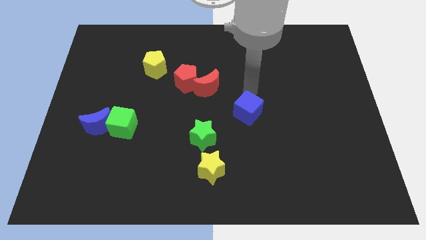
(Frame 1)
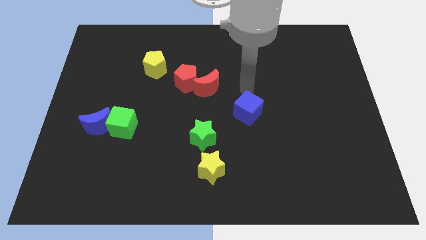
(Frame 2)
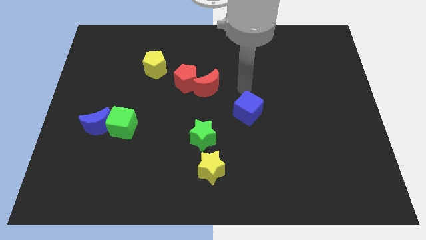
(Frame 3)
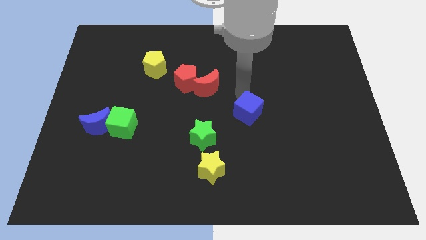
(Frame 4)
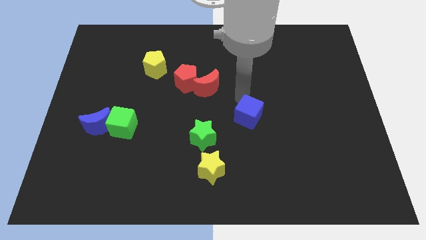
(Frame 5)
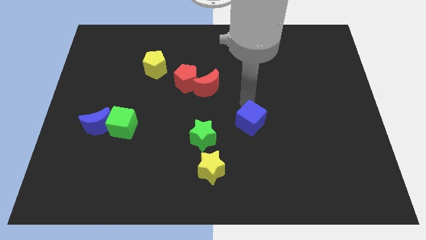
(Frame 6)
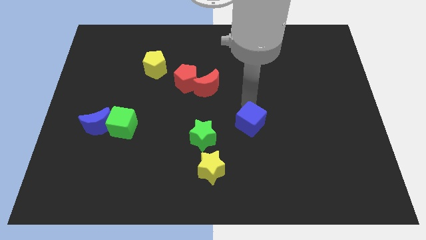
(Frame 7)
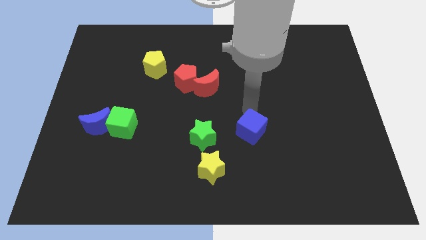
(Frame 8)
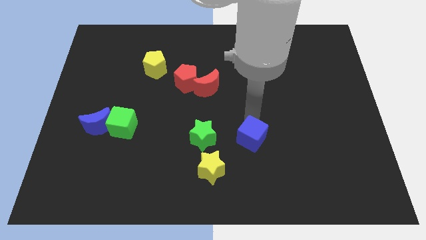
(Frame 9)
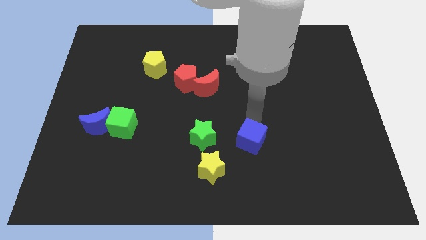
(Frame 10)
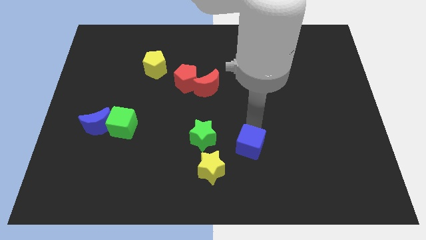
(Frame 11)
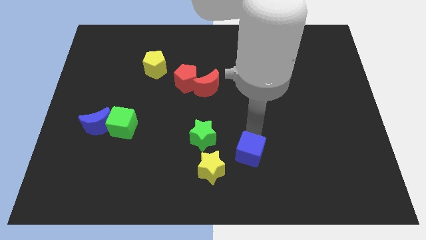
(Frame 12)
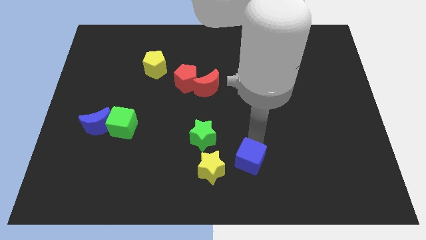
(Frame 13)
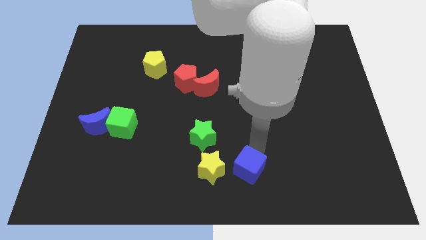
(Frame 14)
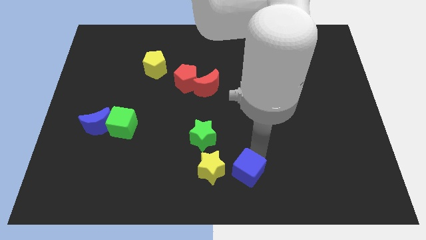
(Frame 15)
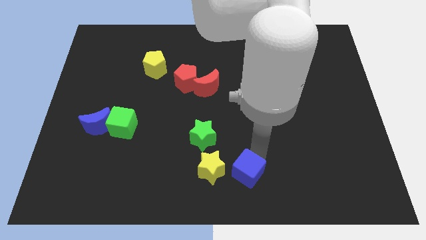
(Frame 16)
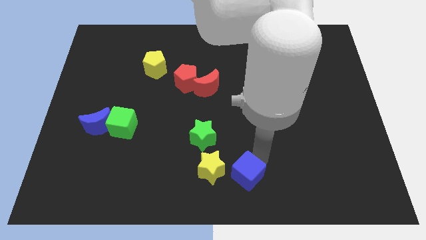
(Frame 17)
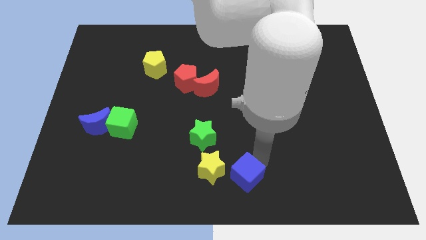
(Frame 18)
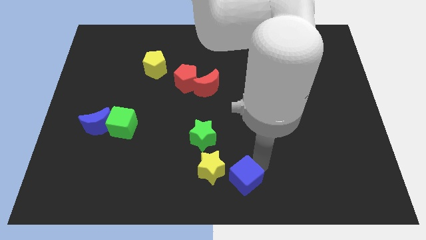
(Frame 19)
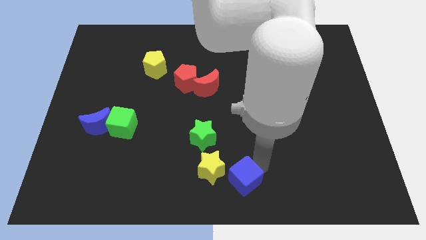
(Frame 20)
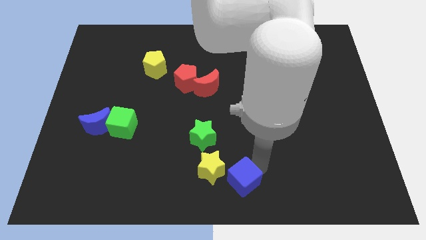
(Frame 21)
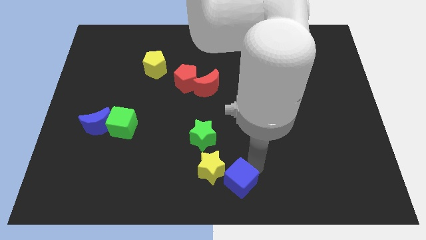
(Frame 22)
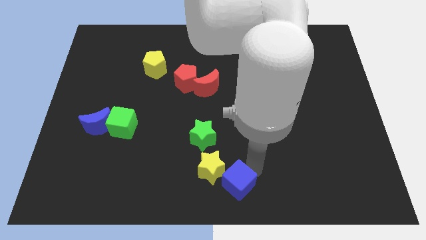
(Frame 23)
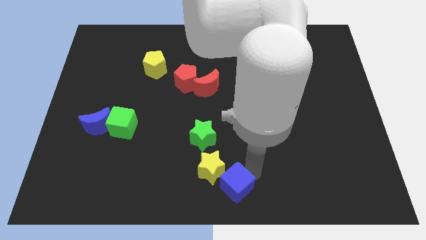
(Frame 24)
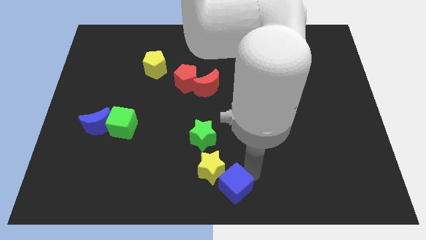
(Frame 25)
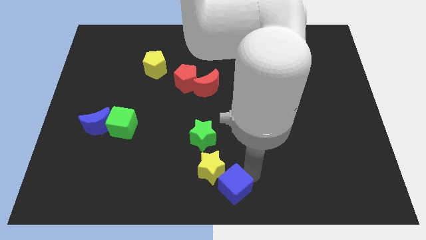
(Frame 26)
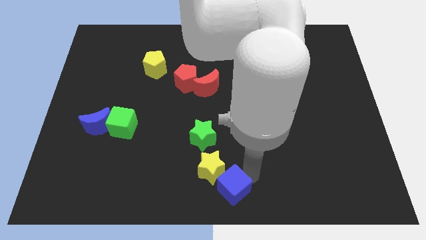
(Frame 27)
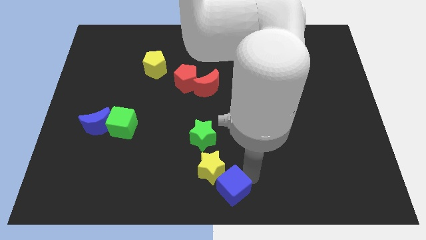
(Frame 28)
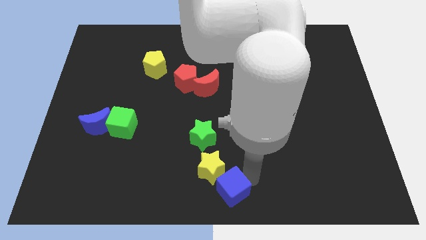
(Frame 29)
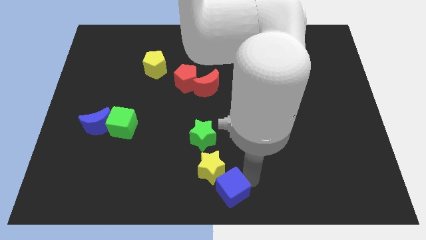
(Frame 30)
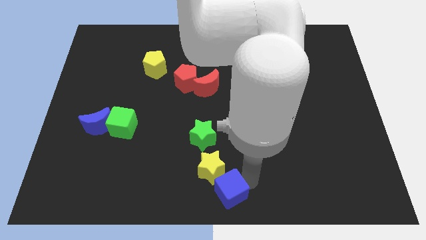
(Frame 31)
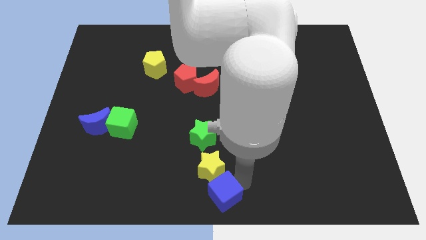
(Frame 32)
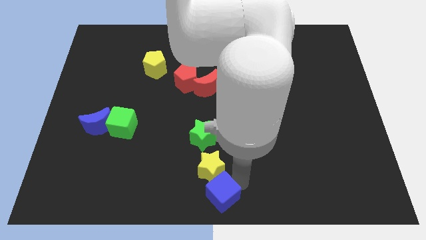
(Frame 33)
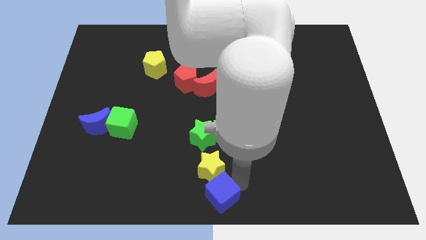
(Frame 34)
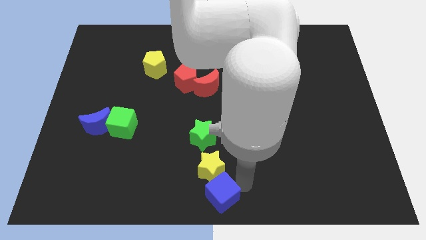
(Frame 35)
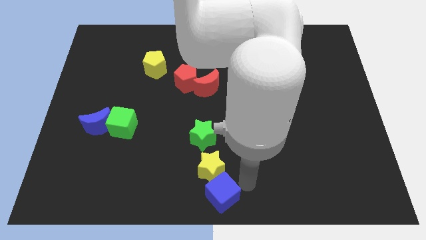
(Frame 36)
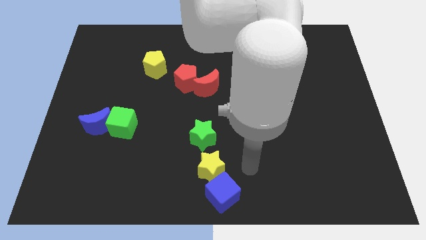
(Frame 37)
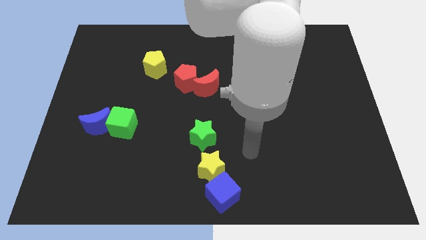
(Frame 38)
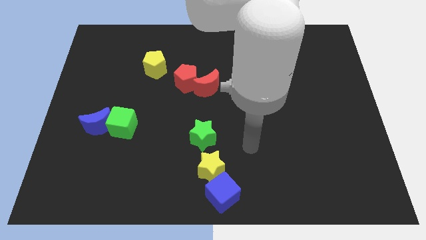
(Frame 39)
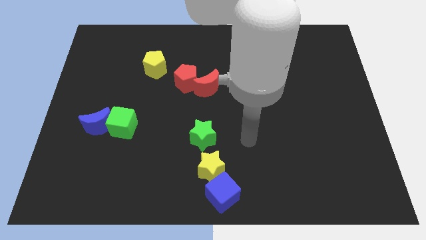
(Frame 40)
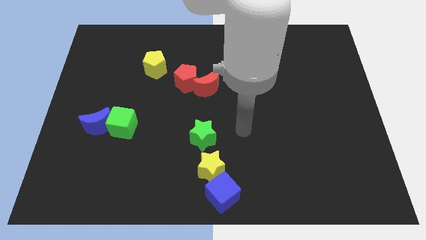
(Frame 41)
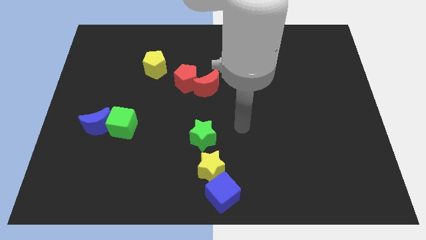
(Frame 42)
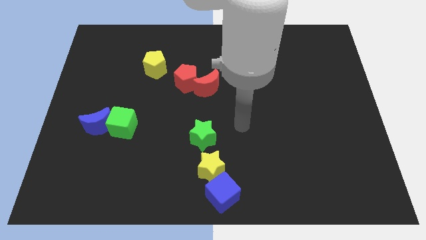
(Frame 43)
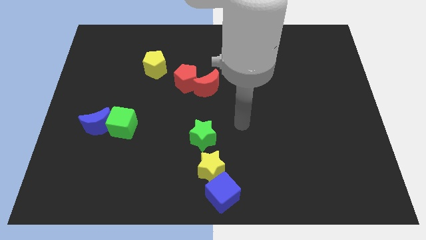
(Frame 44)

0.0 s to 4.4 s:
push blue cube at bottom center

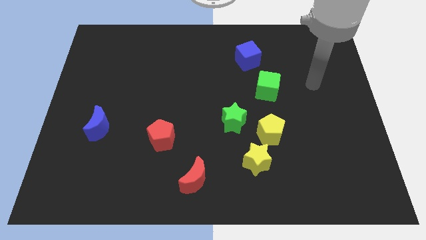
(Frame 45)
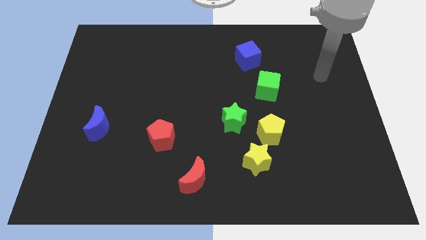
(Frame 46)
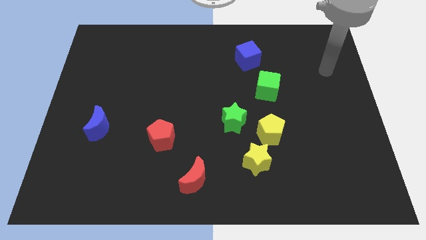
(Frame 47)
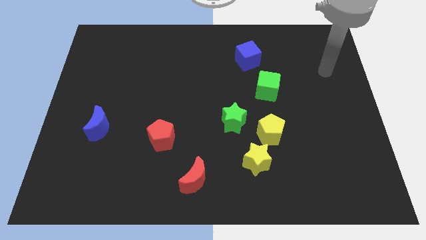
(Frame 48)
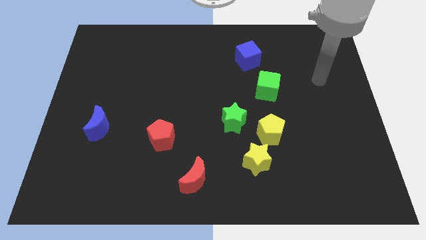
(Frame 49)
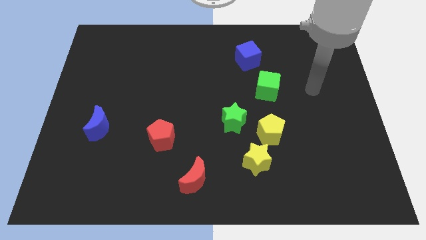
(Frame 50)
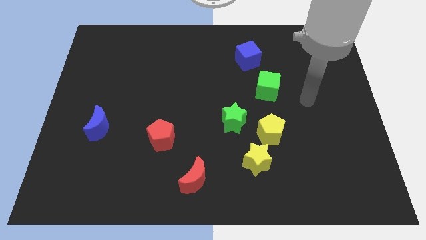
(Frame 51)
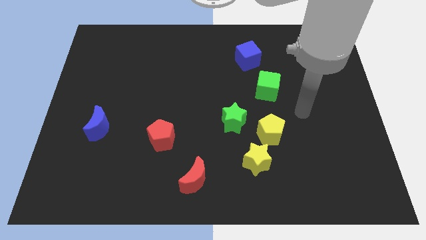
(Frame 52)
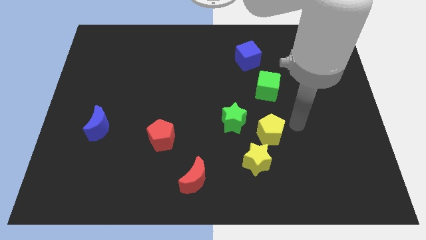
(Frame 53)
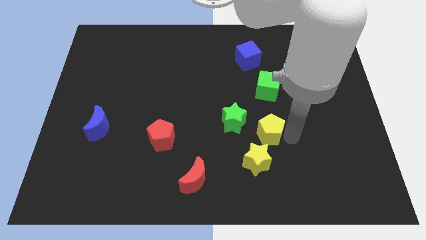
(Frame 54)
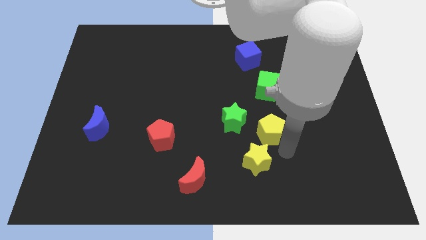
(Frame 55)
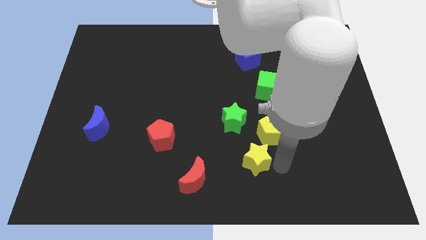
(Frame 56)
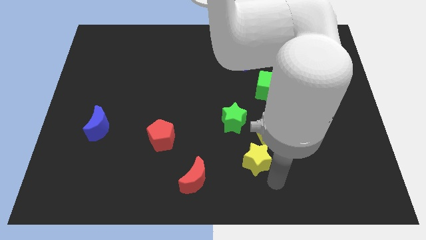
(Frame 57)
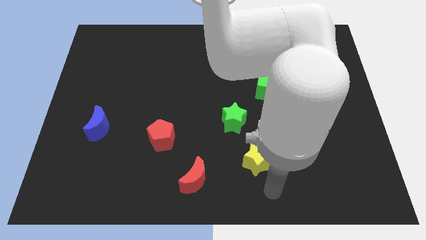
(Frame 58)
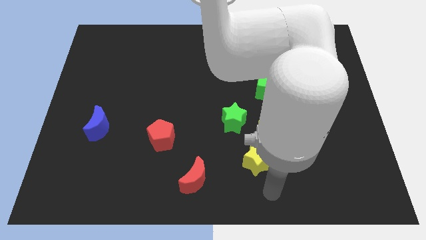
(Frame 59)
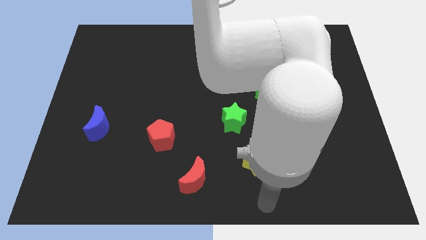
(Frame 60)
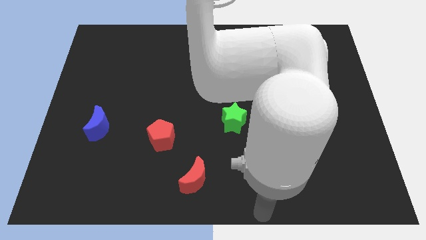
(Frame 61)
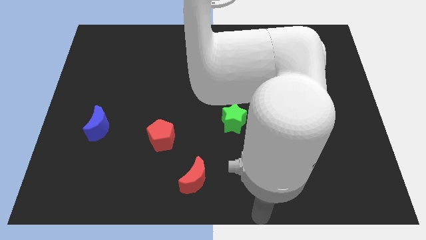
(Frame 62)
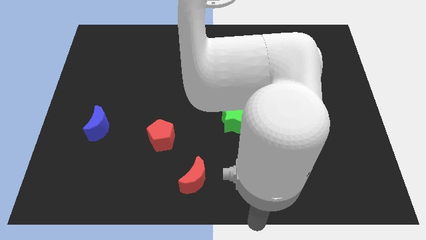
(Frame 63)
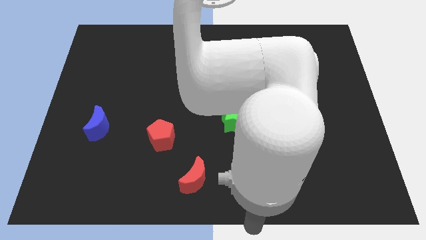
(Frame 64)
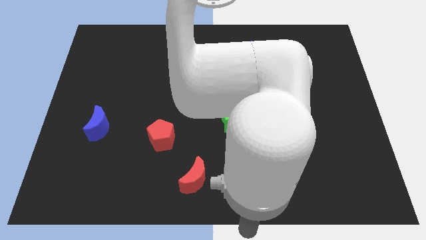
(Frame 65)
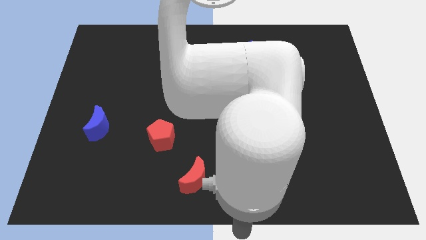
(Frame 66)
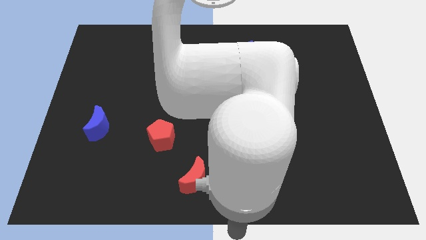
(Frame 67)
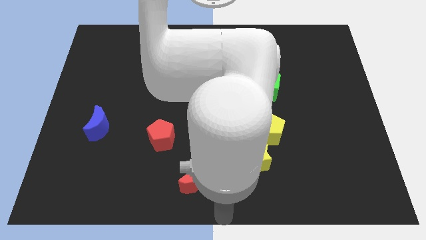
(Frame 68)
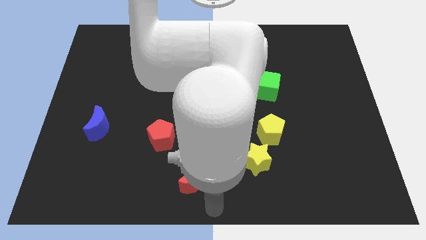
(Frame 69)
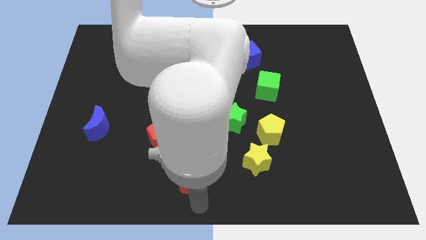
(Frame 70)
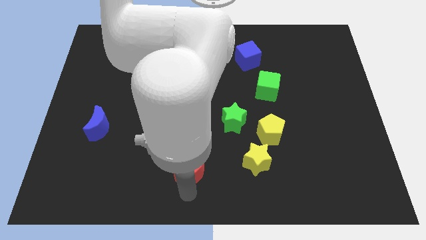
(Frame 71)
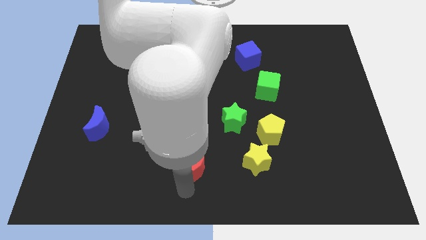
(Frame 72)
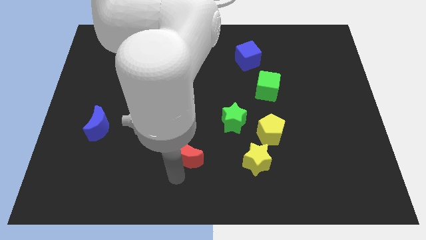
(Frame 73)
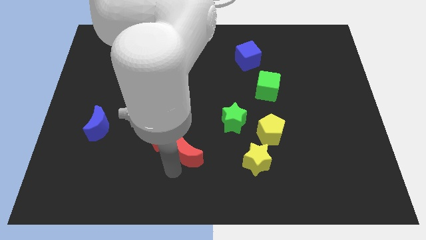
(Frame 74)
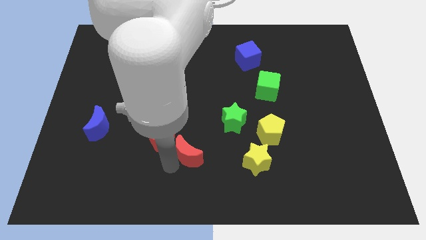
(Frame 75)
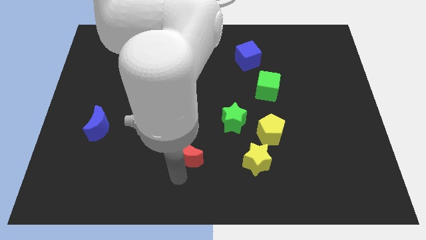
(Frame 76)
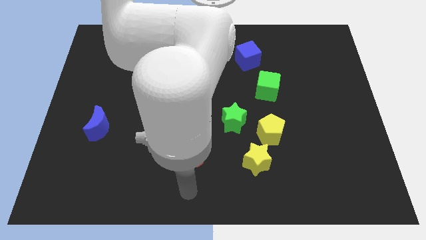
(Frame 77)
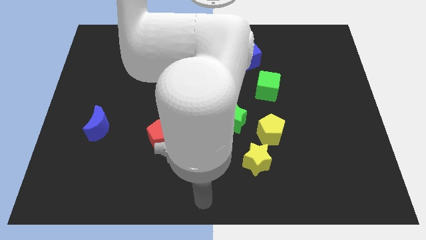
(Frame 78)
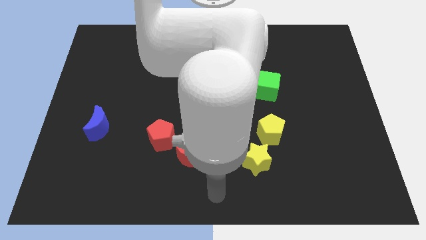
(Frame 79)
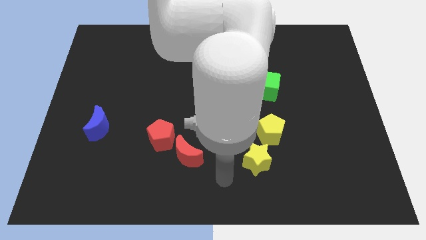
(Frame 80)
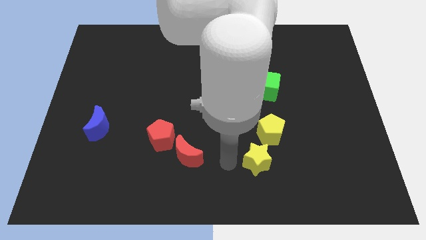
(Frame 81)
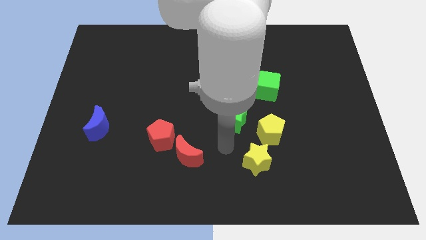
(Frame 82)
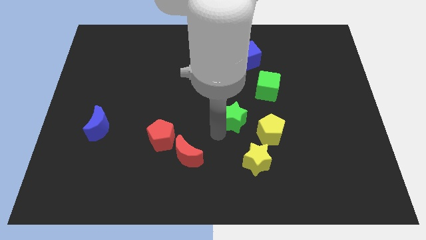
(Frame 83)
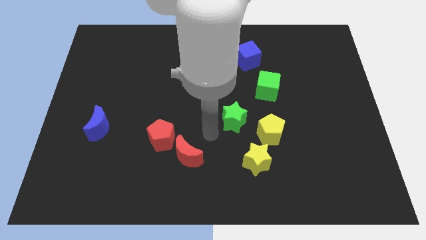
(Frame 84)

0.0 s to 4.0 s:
push the red crescent close to the red pentagon

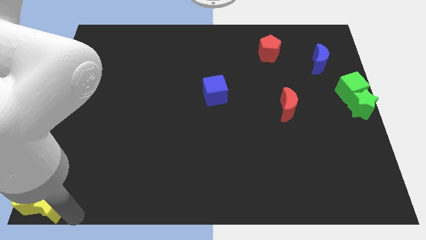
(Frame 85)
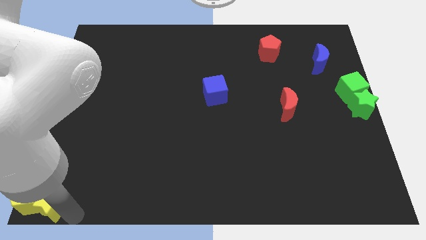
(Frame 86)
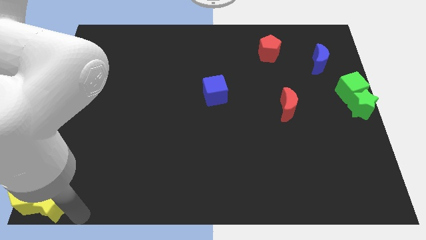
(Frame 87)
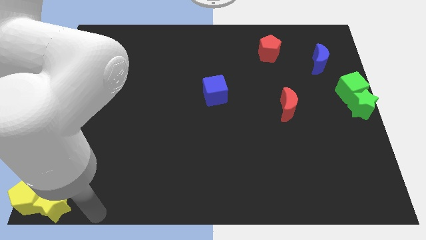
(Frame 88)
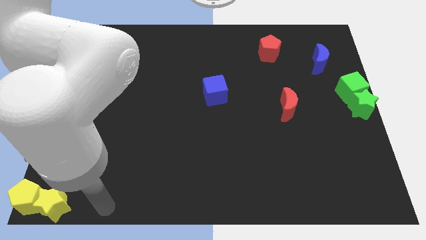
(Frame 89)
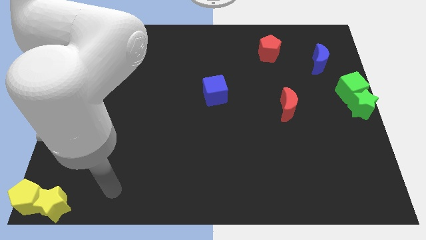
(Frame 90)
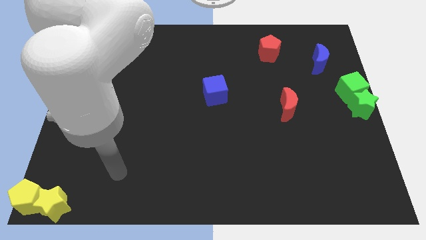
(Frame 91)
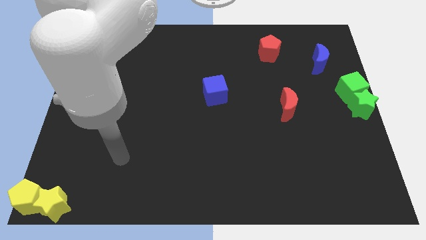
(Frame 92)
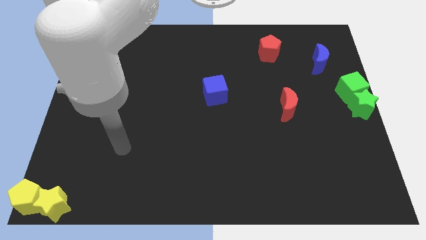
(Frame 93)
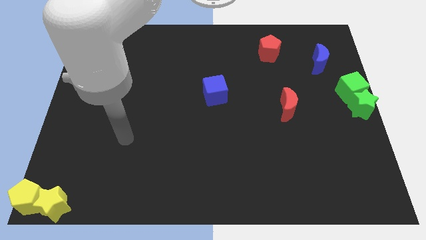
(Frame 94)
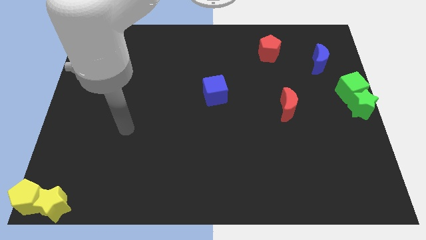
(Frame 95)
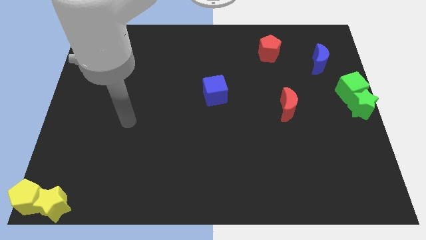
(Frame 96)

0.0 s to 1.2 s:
move your arm away from yellow star
